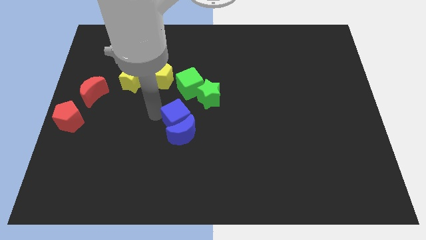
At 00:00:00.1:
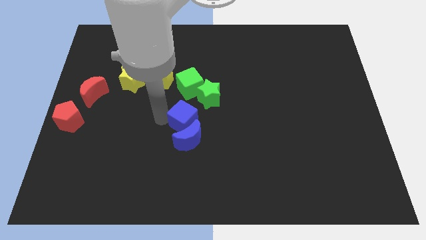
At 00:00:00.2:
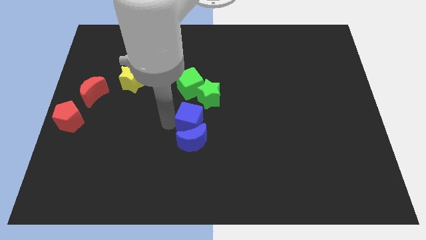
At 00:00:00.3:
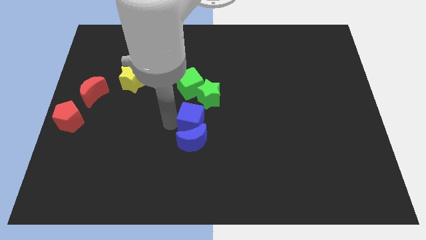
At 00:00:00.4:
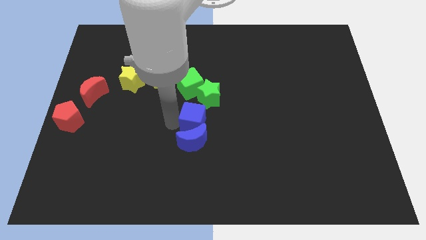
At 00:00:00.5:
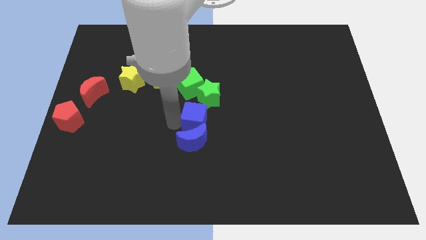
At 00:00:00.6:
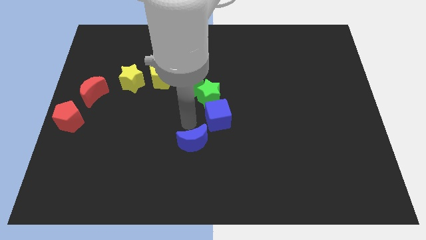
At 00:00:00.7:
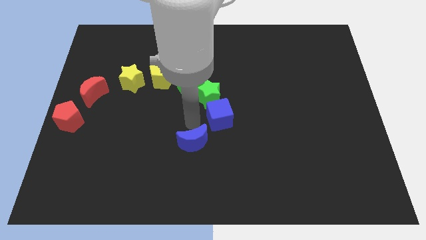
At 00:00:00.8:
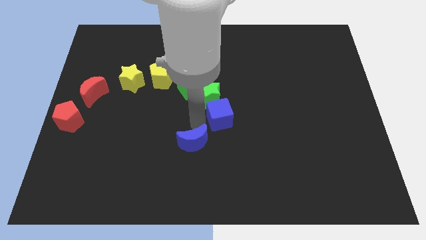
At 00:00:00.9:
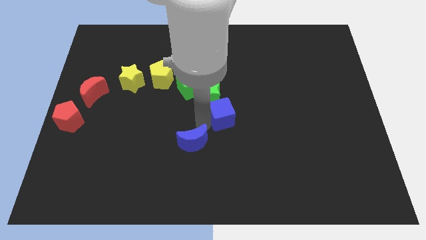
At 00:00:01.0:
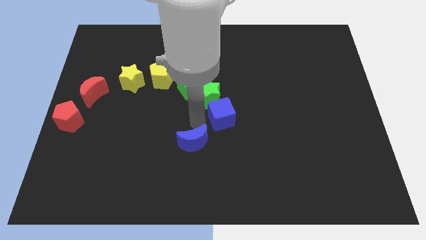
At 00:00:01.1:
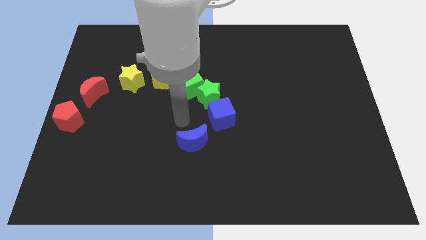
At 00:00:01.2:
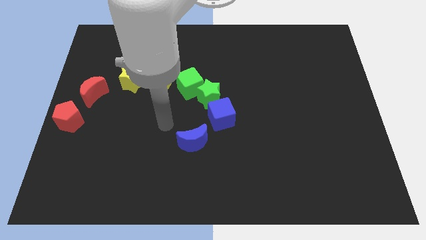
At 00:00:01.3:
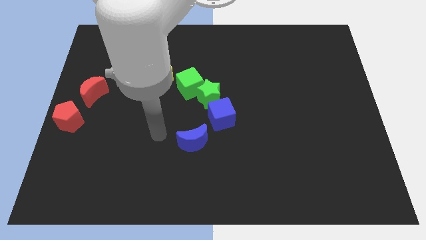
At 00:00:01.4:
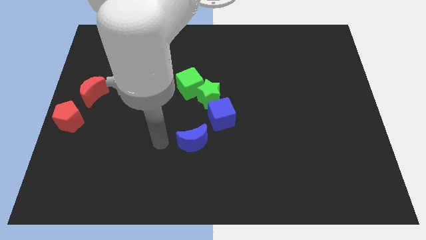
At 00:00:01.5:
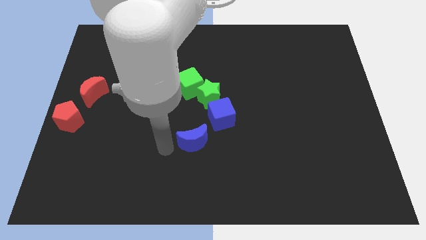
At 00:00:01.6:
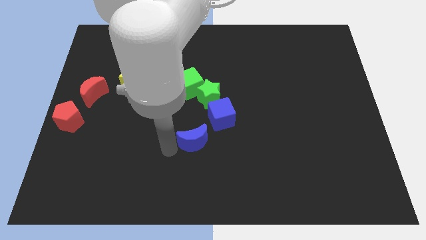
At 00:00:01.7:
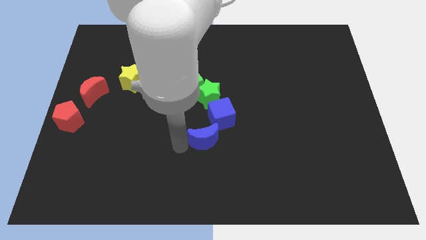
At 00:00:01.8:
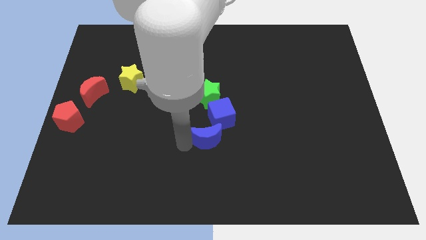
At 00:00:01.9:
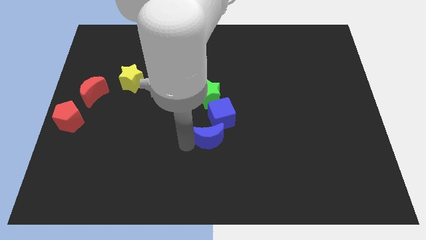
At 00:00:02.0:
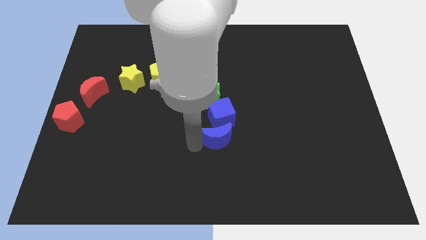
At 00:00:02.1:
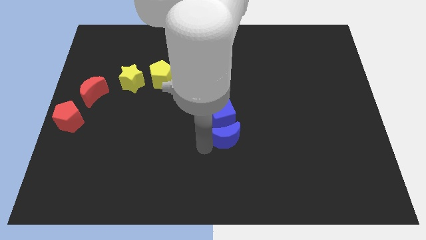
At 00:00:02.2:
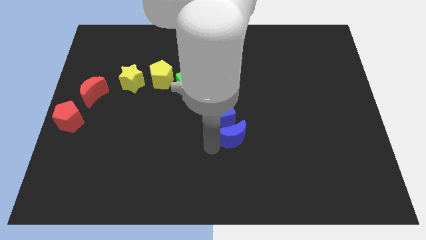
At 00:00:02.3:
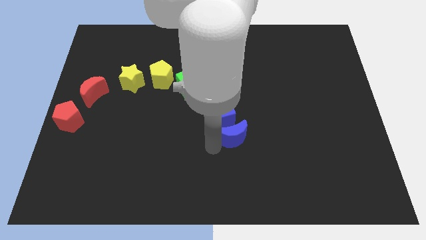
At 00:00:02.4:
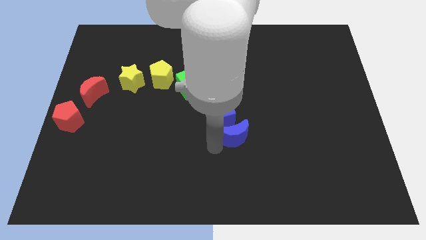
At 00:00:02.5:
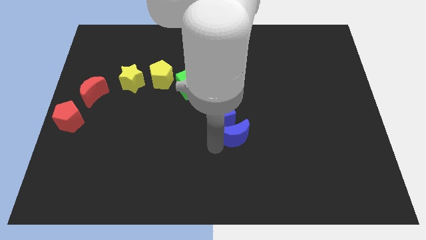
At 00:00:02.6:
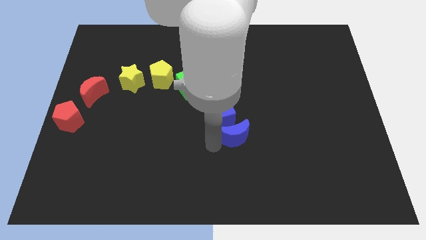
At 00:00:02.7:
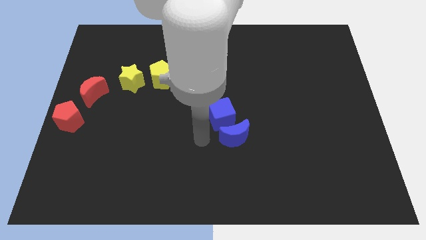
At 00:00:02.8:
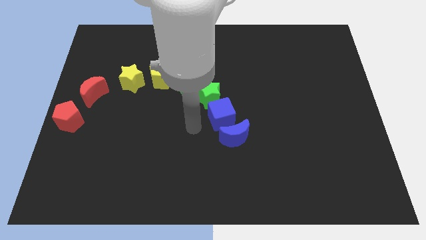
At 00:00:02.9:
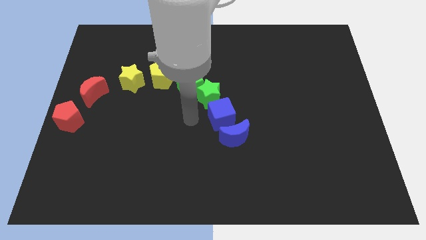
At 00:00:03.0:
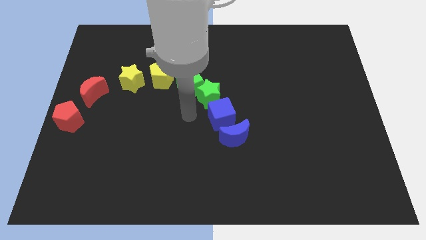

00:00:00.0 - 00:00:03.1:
push the blue cubes diagonally bottom right to the green star

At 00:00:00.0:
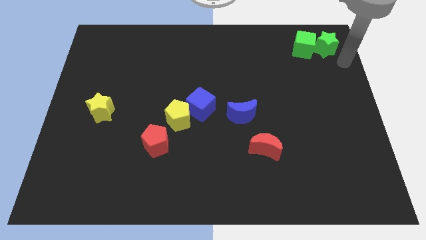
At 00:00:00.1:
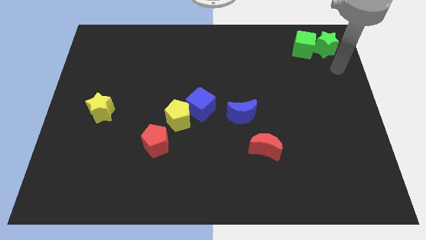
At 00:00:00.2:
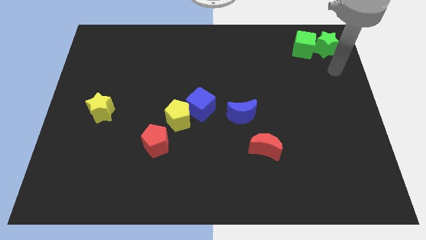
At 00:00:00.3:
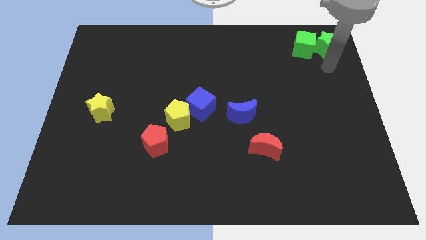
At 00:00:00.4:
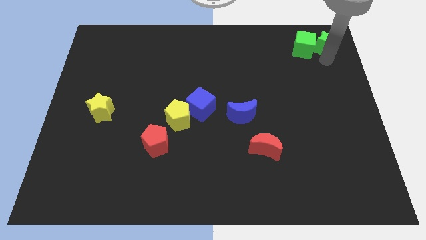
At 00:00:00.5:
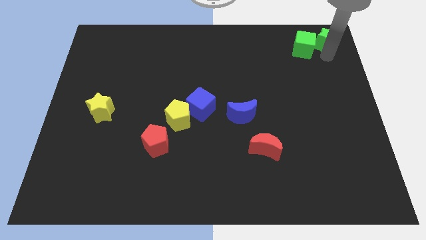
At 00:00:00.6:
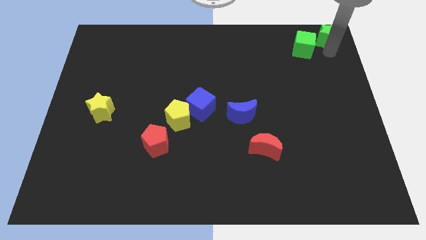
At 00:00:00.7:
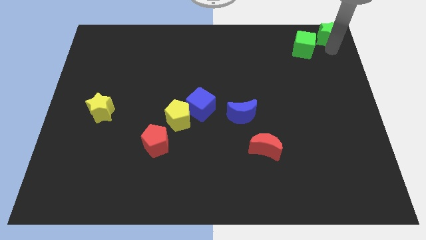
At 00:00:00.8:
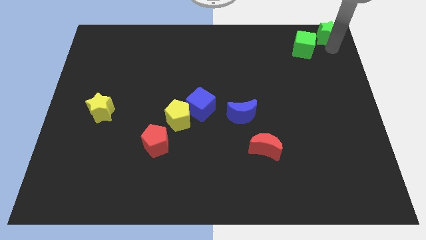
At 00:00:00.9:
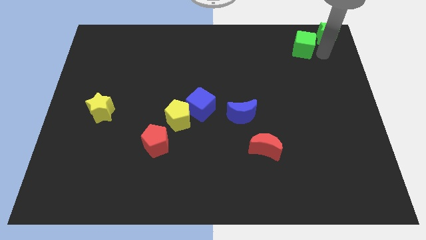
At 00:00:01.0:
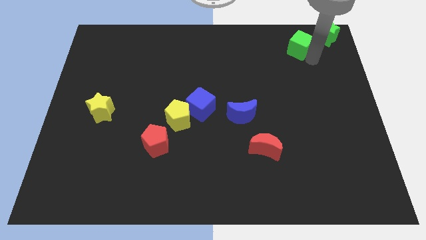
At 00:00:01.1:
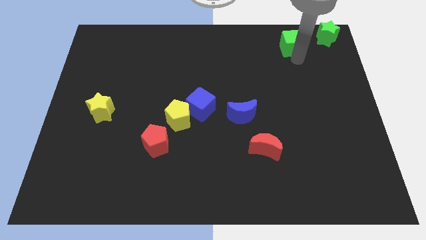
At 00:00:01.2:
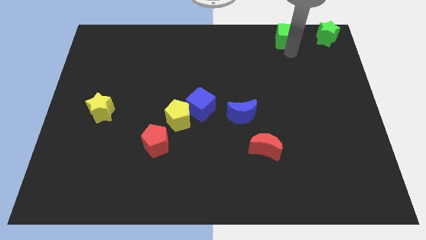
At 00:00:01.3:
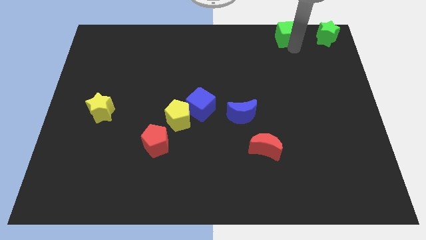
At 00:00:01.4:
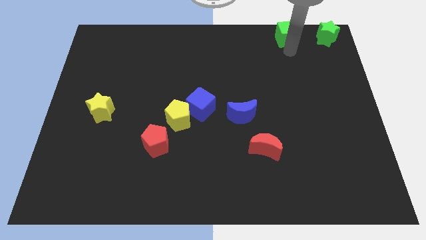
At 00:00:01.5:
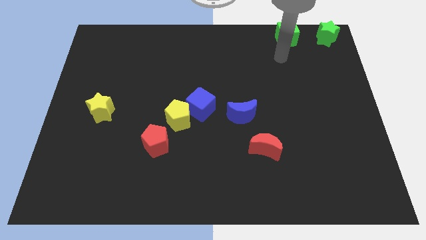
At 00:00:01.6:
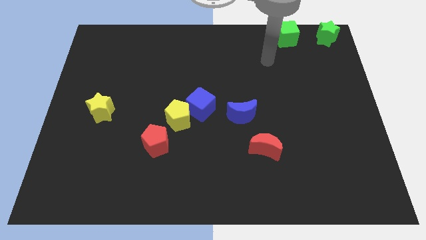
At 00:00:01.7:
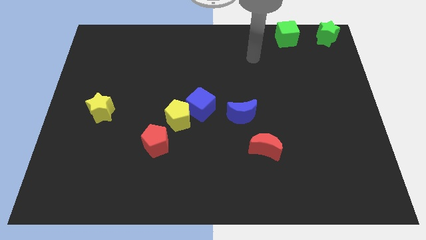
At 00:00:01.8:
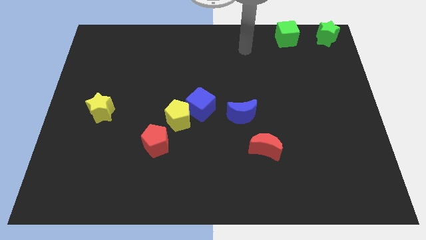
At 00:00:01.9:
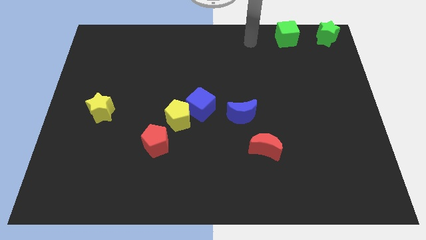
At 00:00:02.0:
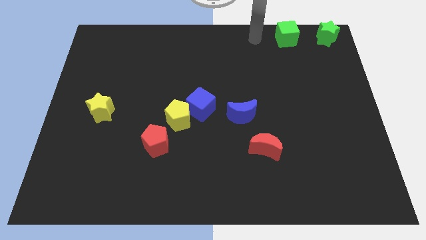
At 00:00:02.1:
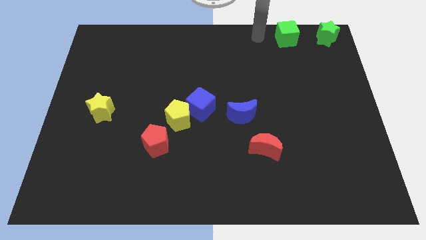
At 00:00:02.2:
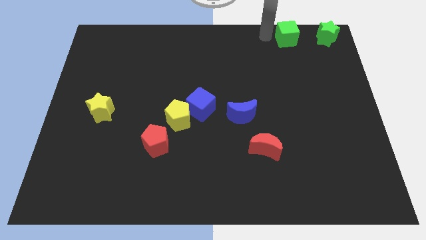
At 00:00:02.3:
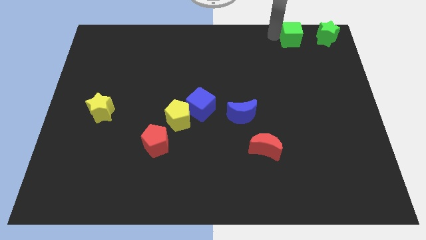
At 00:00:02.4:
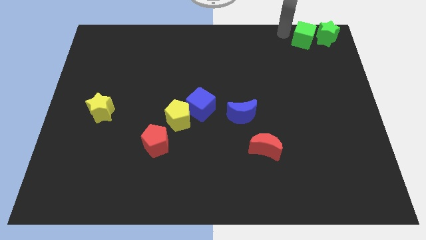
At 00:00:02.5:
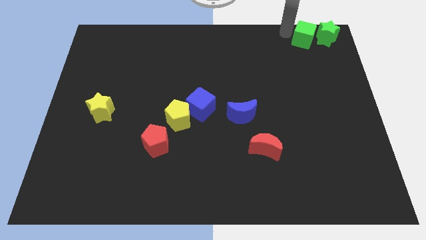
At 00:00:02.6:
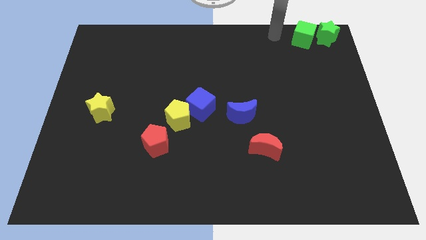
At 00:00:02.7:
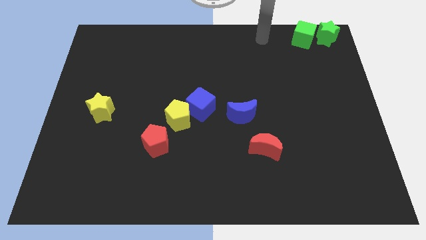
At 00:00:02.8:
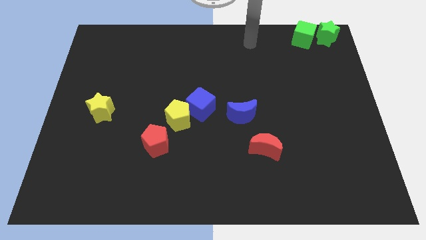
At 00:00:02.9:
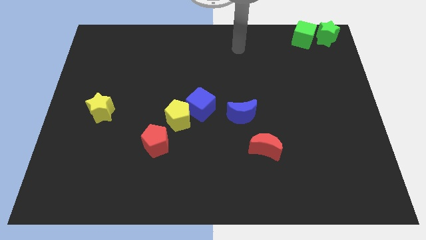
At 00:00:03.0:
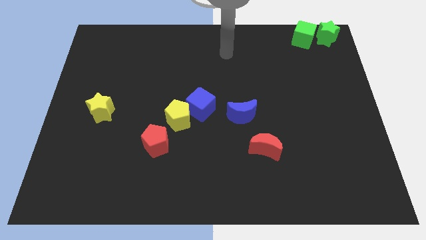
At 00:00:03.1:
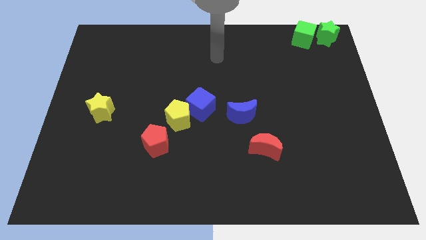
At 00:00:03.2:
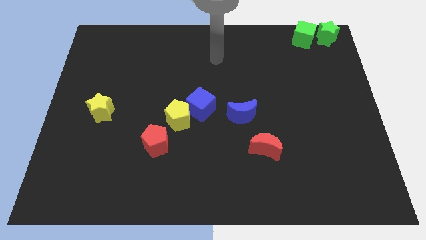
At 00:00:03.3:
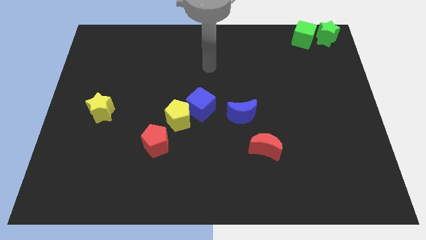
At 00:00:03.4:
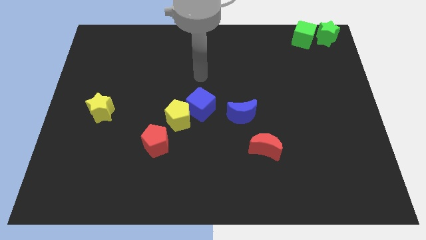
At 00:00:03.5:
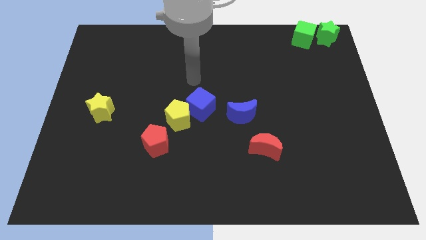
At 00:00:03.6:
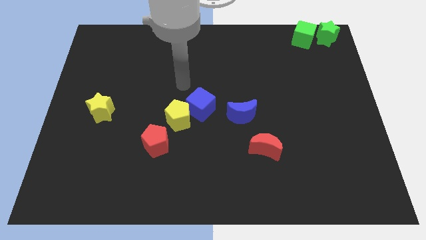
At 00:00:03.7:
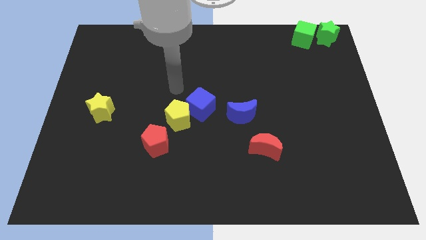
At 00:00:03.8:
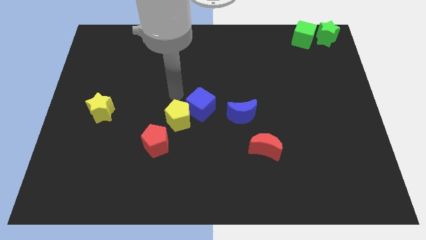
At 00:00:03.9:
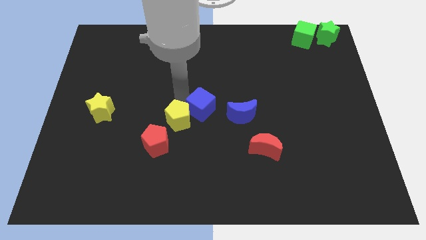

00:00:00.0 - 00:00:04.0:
push green cube into the green star

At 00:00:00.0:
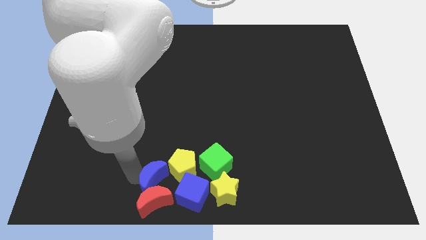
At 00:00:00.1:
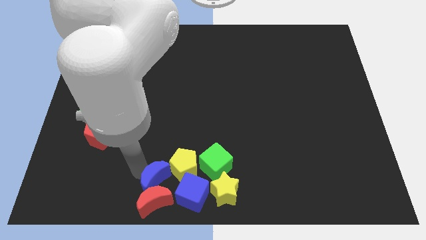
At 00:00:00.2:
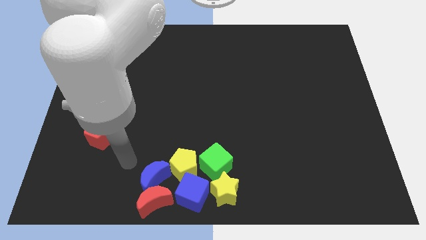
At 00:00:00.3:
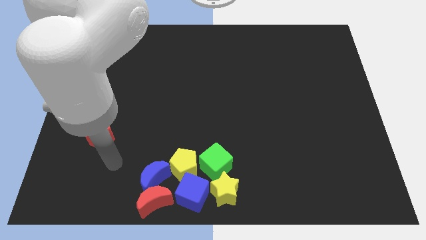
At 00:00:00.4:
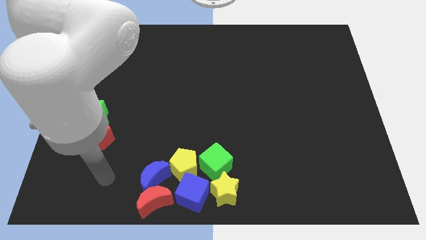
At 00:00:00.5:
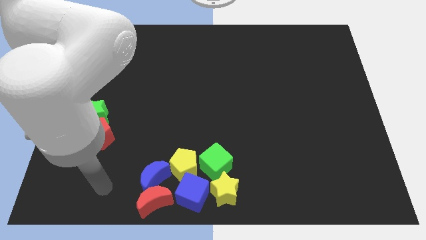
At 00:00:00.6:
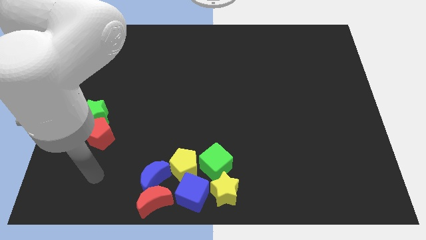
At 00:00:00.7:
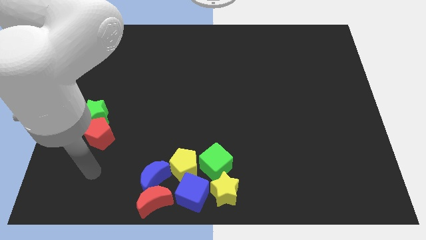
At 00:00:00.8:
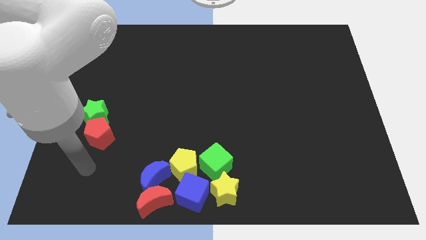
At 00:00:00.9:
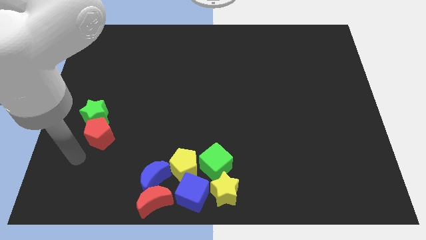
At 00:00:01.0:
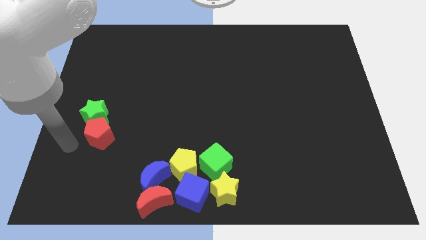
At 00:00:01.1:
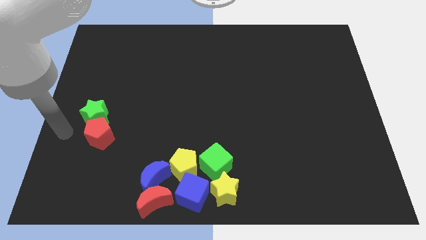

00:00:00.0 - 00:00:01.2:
go away from the group of blocks

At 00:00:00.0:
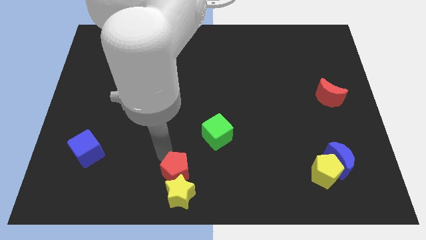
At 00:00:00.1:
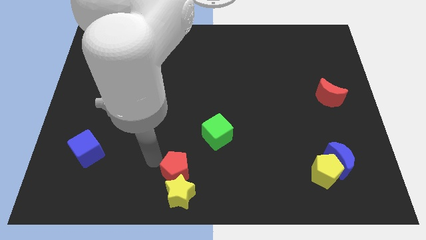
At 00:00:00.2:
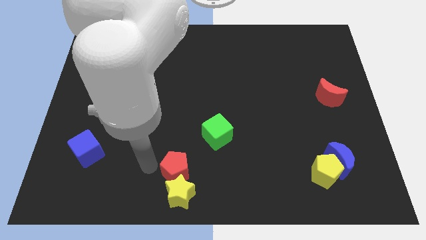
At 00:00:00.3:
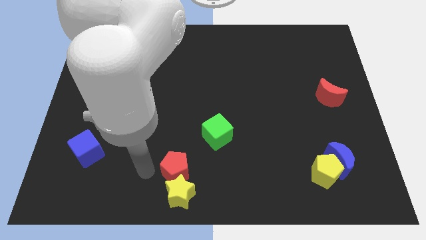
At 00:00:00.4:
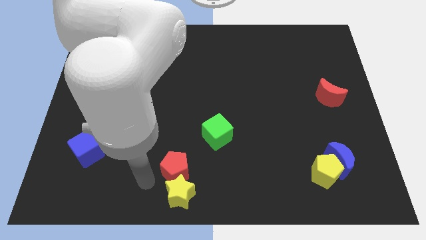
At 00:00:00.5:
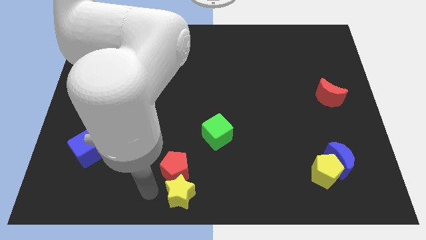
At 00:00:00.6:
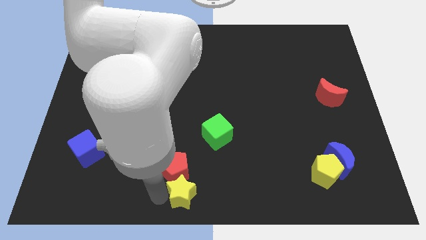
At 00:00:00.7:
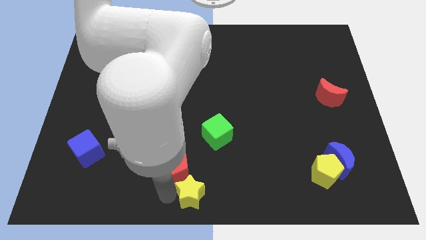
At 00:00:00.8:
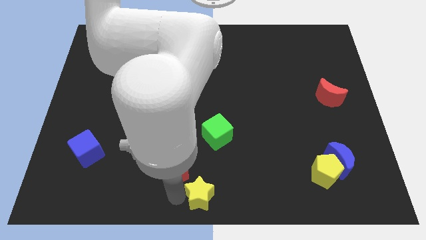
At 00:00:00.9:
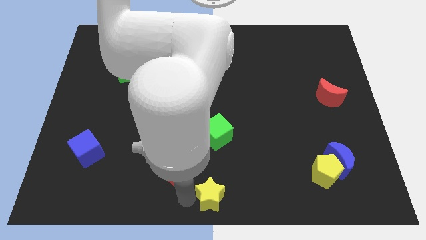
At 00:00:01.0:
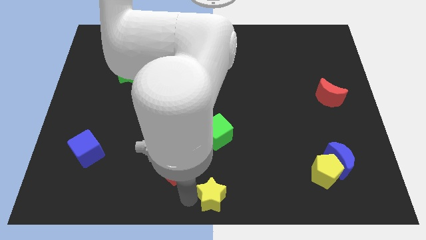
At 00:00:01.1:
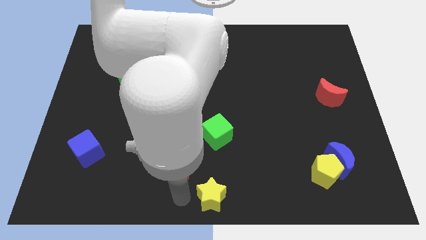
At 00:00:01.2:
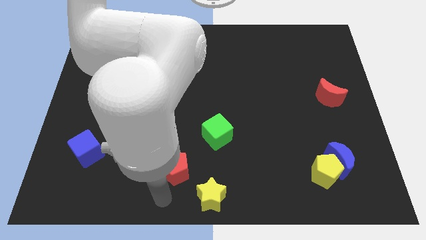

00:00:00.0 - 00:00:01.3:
separate the yellow star from the red pentagon
